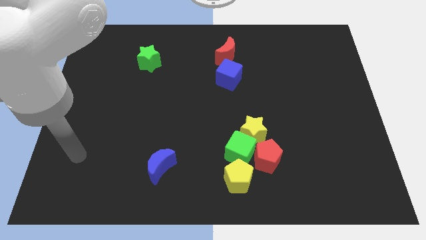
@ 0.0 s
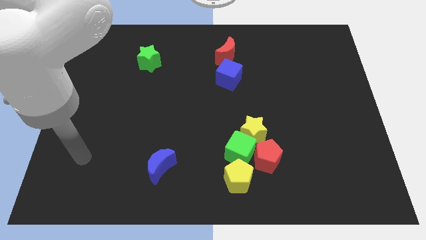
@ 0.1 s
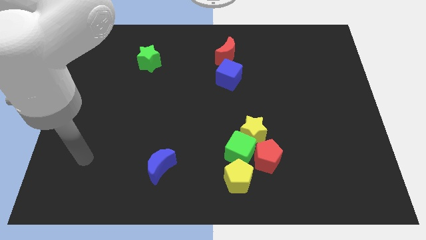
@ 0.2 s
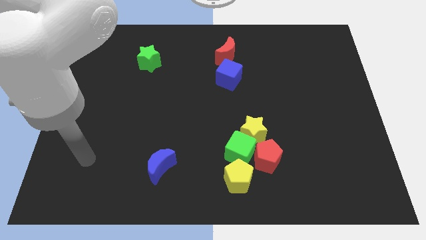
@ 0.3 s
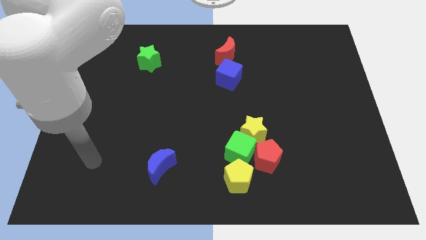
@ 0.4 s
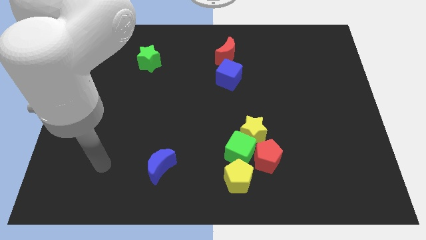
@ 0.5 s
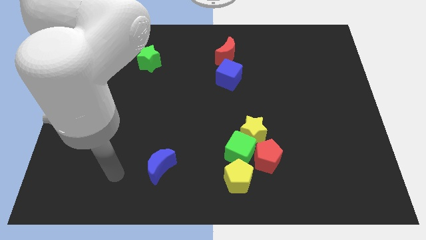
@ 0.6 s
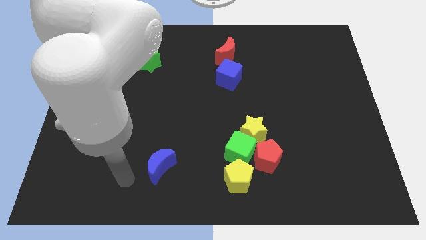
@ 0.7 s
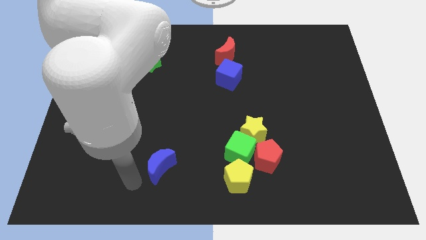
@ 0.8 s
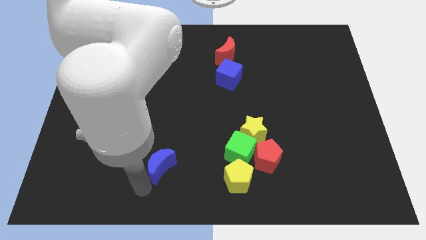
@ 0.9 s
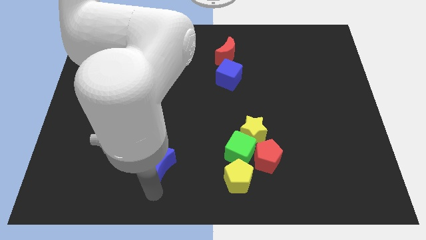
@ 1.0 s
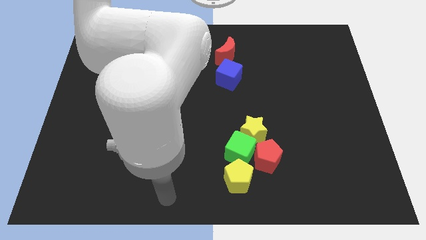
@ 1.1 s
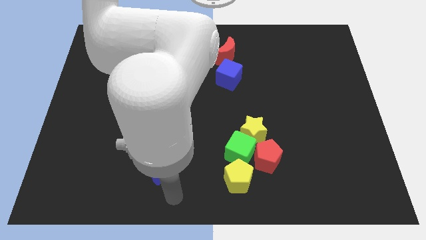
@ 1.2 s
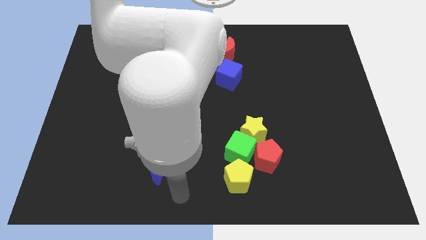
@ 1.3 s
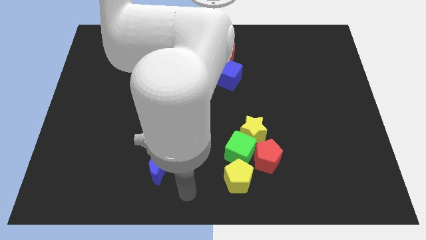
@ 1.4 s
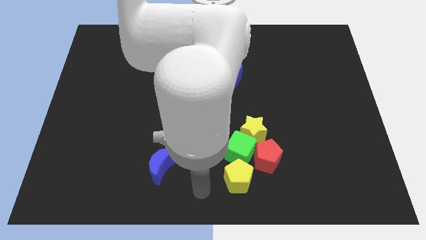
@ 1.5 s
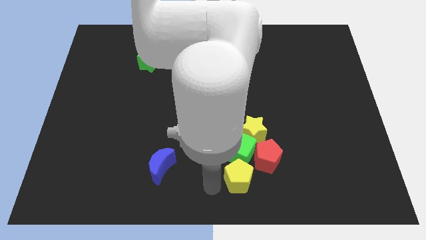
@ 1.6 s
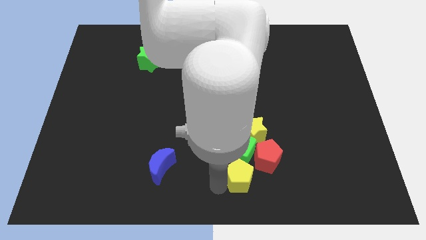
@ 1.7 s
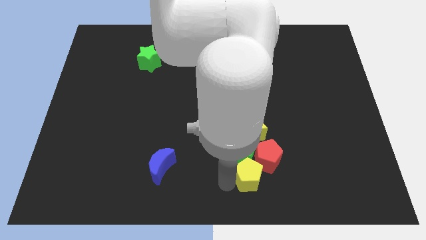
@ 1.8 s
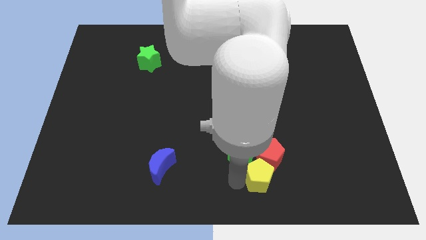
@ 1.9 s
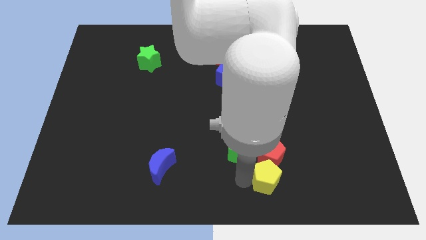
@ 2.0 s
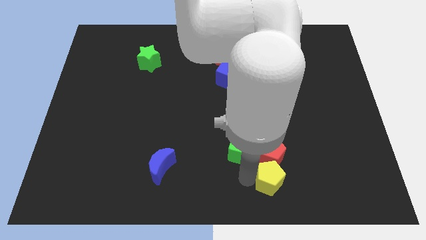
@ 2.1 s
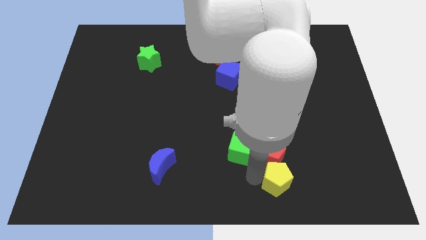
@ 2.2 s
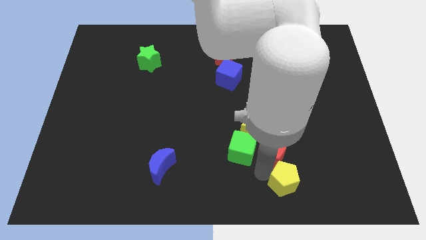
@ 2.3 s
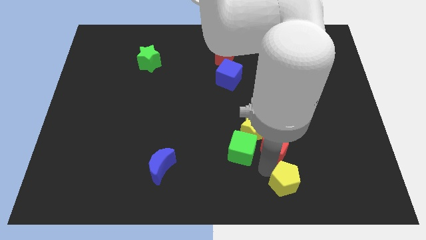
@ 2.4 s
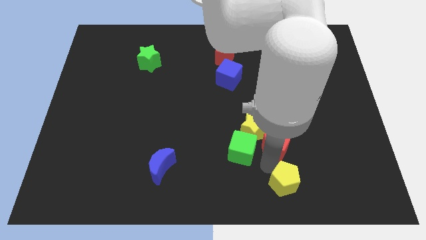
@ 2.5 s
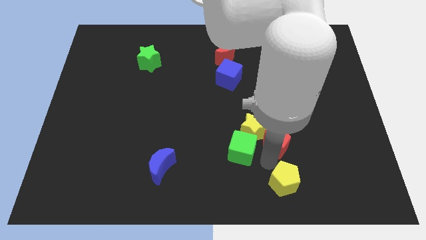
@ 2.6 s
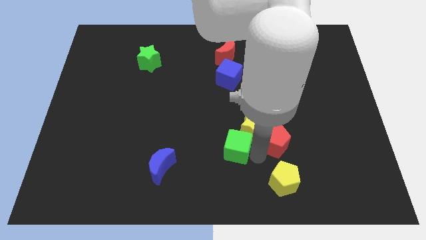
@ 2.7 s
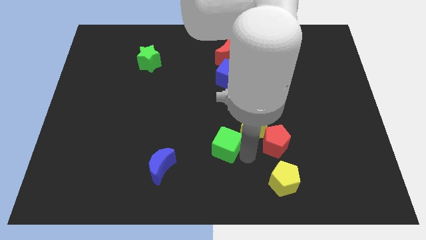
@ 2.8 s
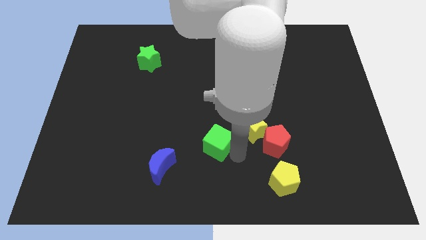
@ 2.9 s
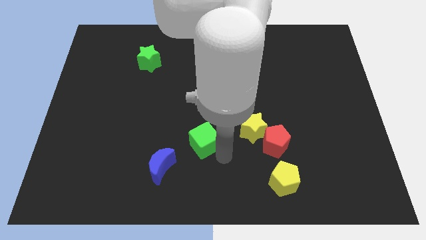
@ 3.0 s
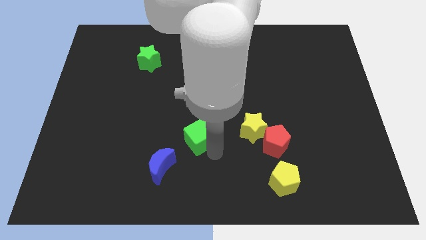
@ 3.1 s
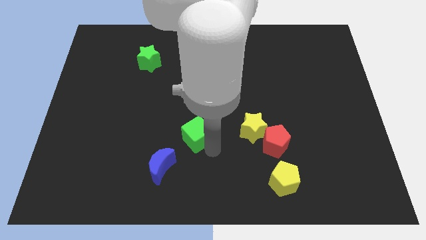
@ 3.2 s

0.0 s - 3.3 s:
separate the green cube from yellow pentagon

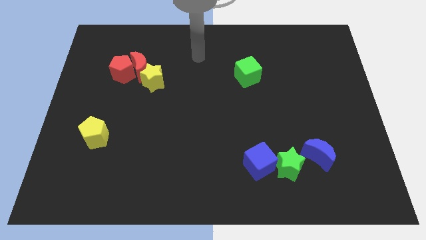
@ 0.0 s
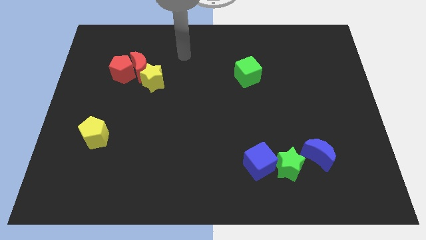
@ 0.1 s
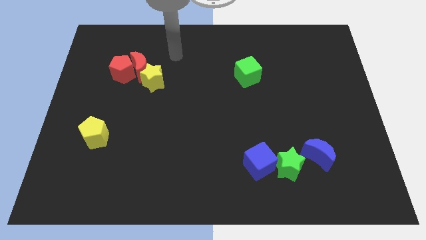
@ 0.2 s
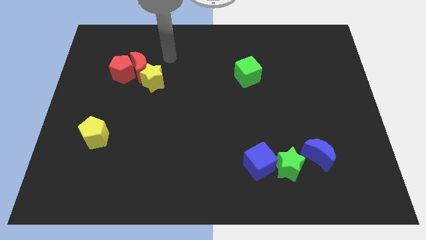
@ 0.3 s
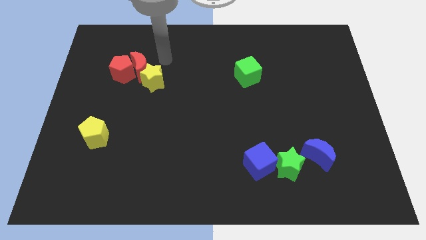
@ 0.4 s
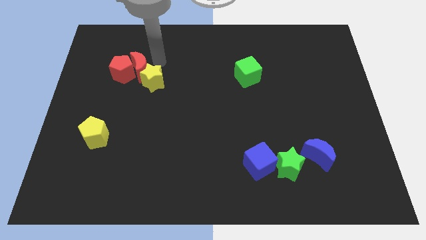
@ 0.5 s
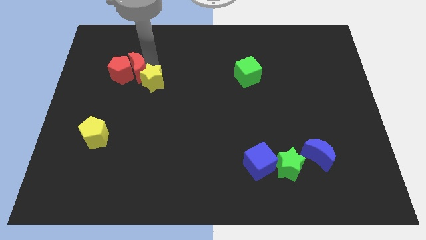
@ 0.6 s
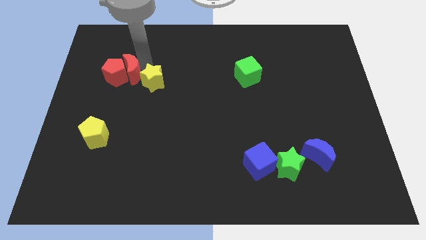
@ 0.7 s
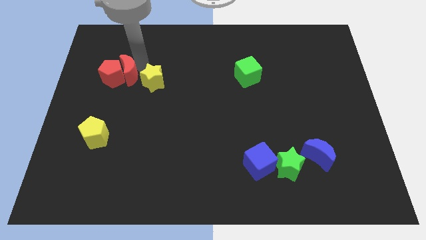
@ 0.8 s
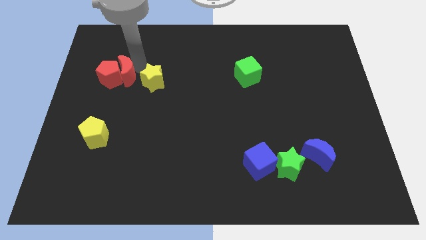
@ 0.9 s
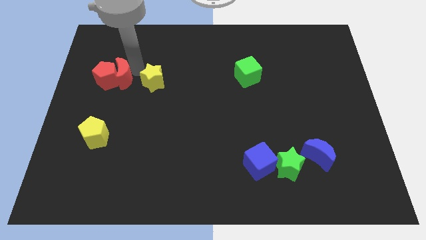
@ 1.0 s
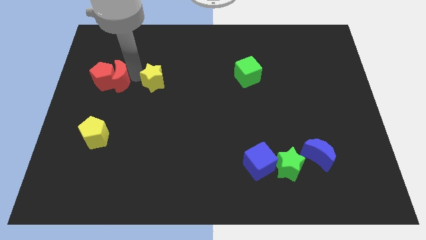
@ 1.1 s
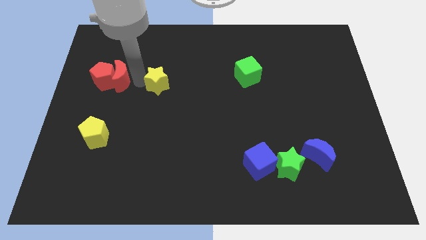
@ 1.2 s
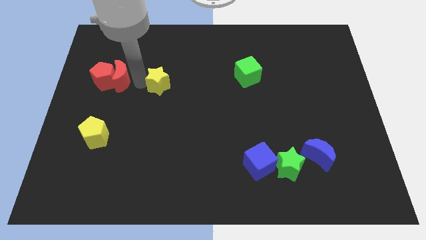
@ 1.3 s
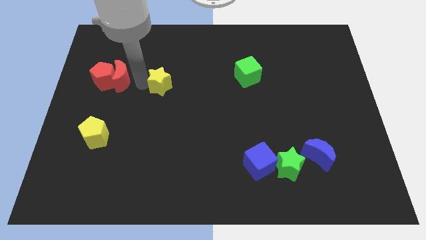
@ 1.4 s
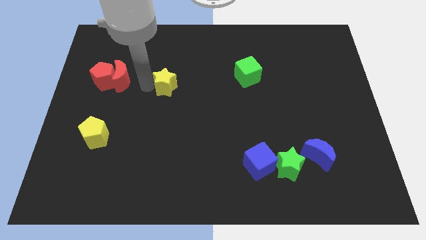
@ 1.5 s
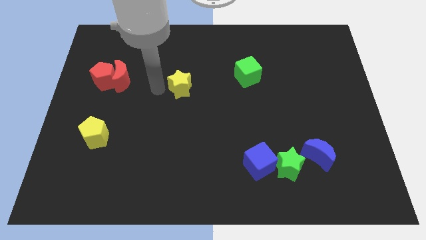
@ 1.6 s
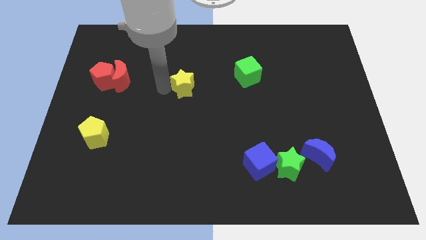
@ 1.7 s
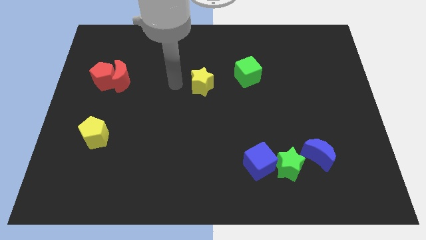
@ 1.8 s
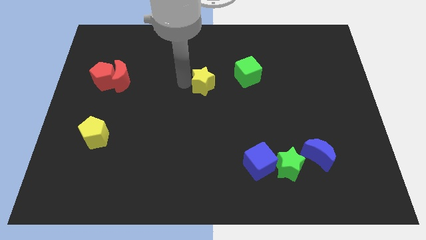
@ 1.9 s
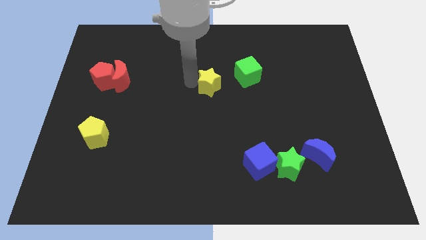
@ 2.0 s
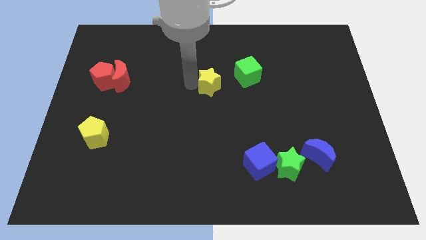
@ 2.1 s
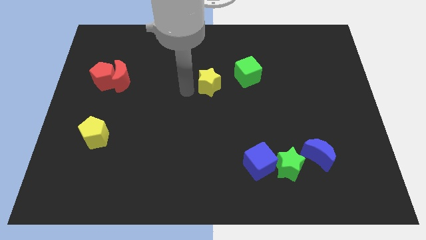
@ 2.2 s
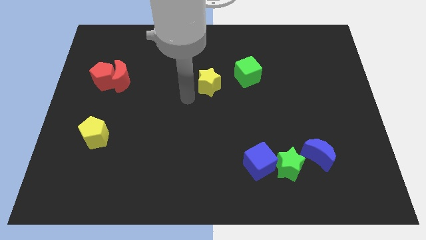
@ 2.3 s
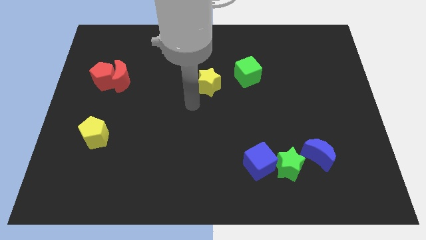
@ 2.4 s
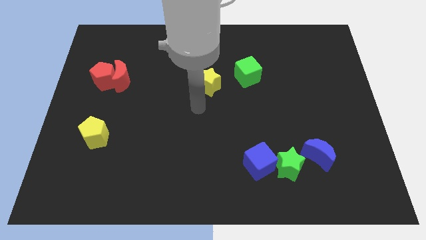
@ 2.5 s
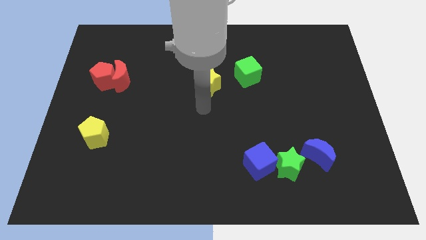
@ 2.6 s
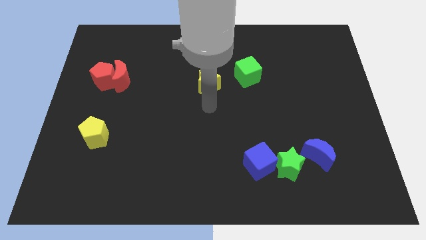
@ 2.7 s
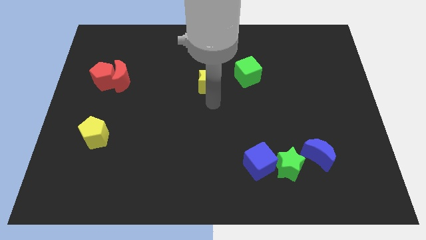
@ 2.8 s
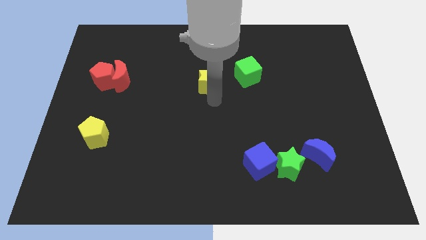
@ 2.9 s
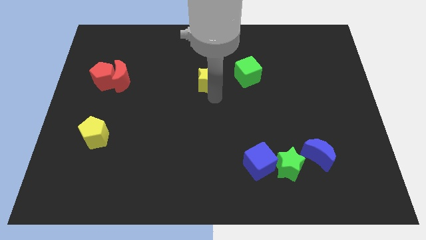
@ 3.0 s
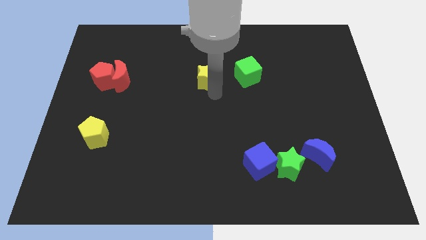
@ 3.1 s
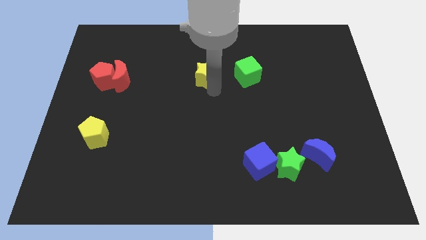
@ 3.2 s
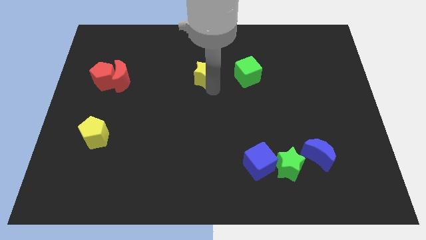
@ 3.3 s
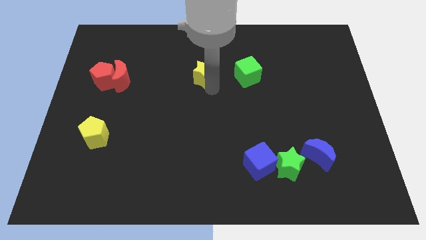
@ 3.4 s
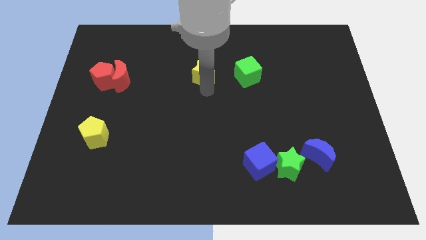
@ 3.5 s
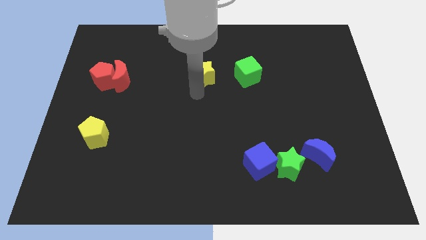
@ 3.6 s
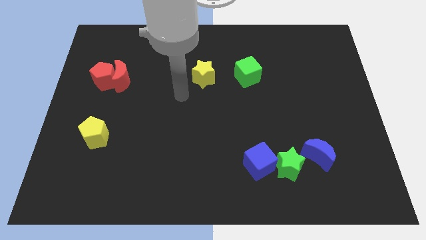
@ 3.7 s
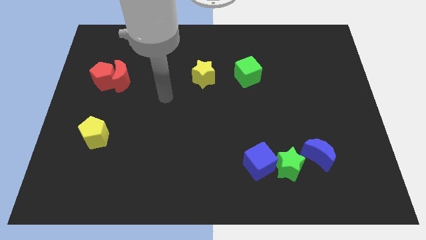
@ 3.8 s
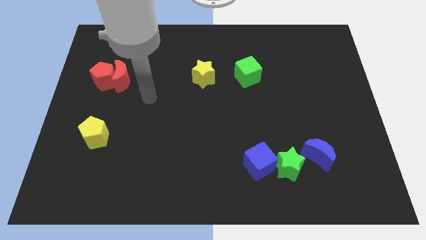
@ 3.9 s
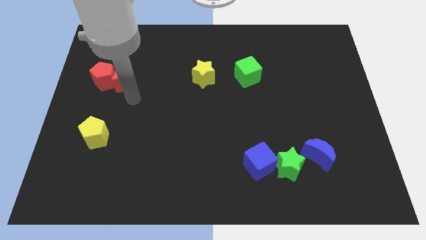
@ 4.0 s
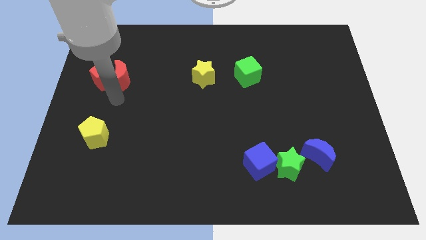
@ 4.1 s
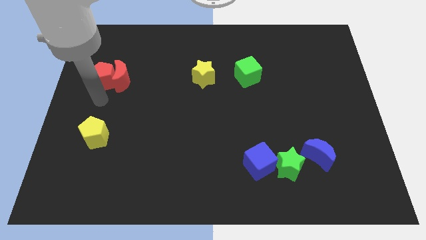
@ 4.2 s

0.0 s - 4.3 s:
place the yellow star left to the green cube

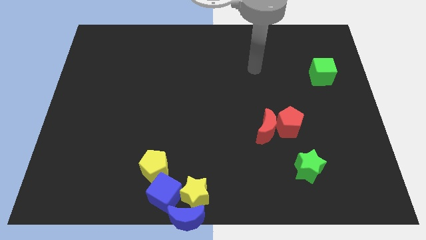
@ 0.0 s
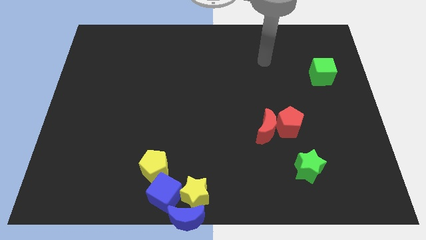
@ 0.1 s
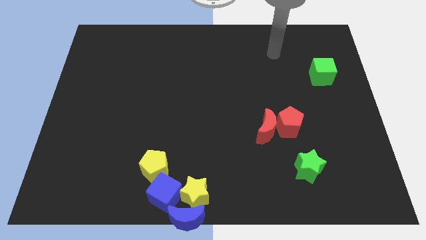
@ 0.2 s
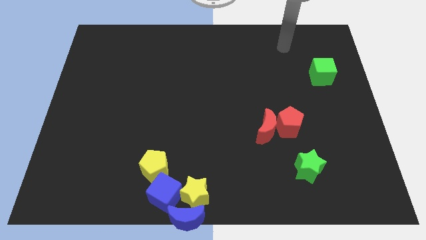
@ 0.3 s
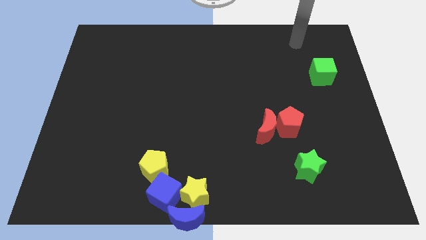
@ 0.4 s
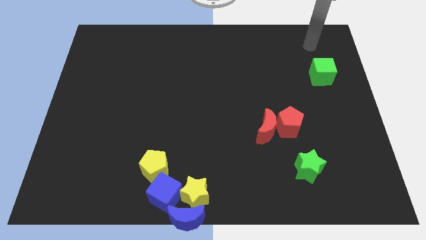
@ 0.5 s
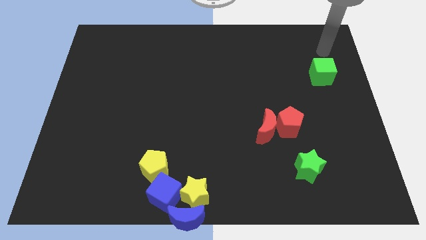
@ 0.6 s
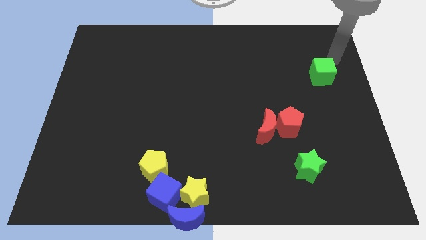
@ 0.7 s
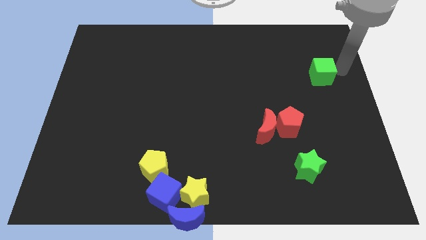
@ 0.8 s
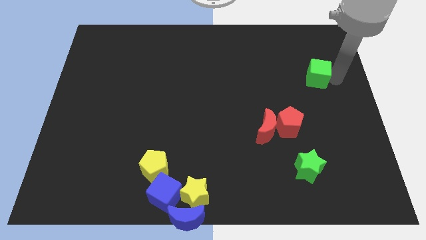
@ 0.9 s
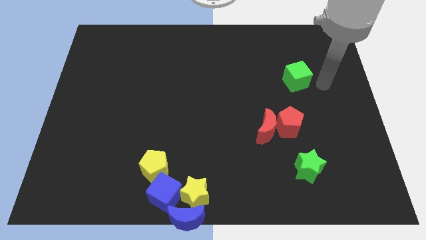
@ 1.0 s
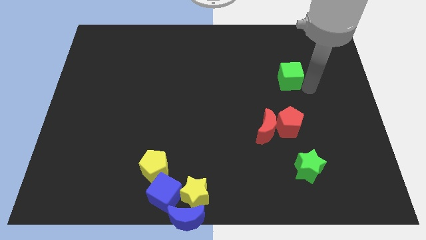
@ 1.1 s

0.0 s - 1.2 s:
place the green cube above the red pentagon
